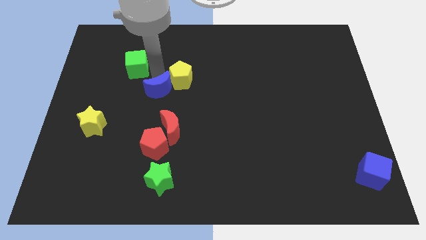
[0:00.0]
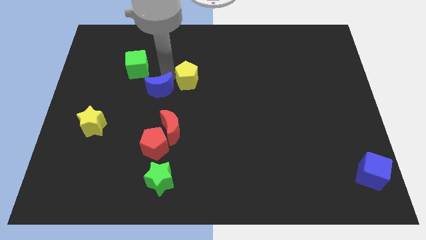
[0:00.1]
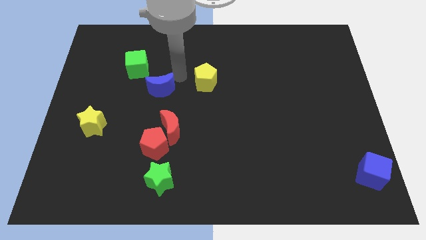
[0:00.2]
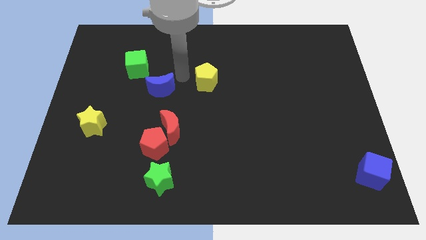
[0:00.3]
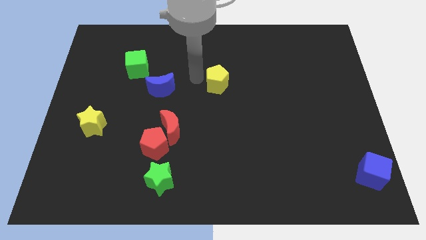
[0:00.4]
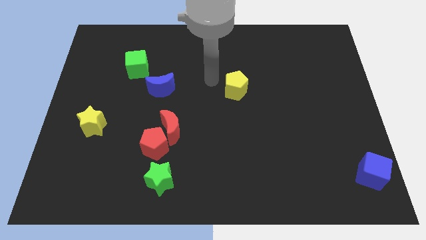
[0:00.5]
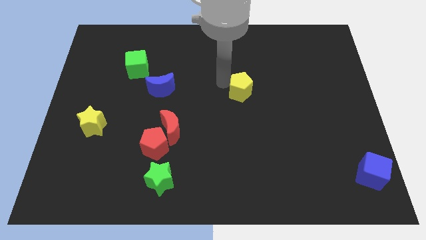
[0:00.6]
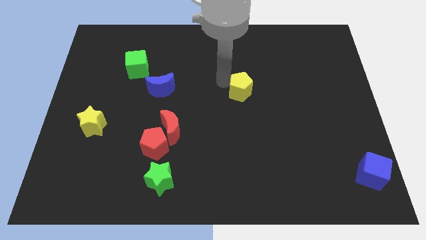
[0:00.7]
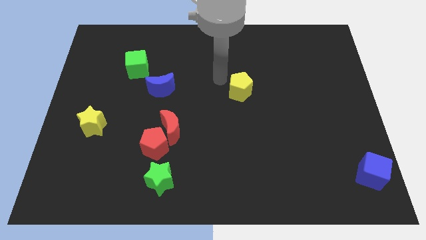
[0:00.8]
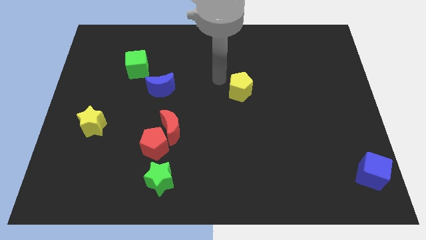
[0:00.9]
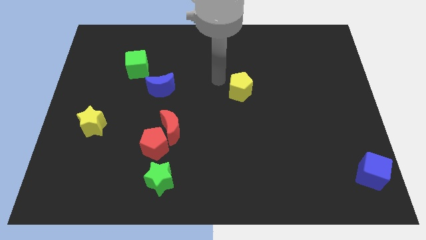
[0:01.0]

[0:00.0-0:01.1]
push yellow pentagon to the center of the board

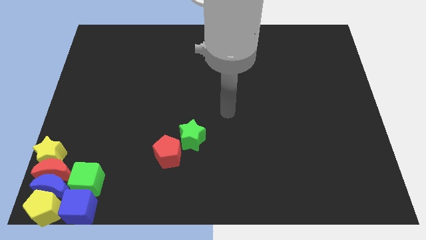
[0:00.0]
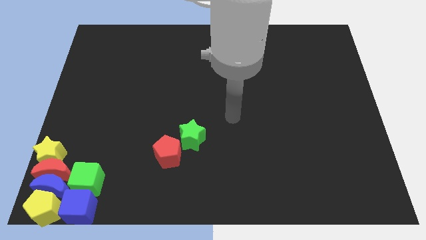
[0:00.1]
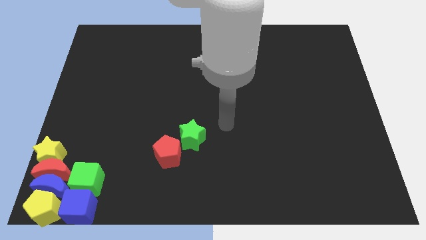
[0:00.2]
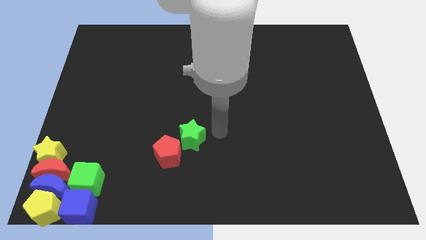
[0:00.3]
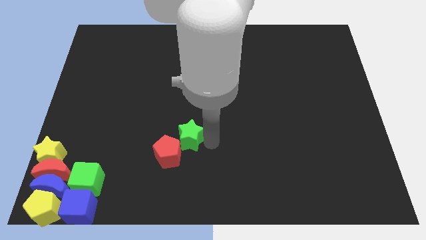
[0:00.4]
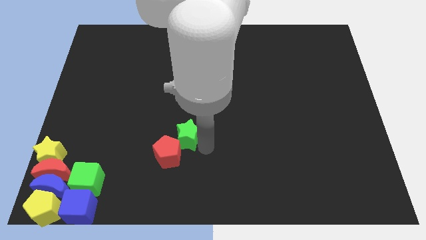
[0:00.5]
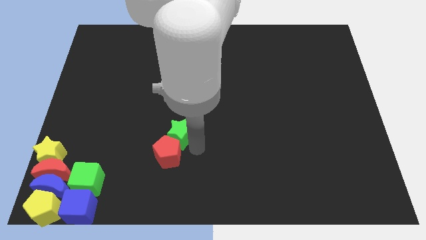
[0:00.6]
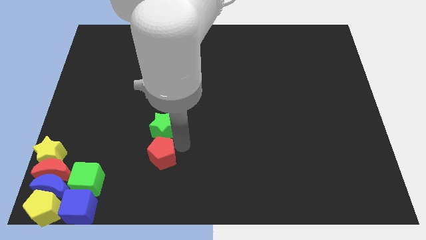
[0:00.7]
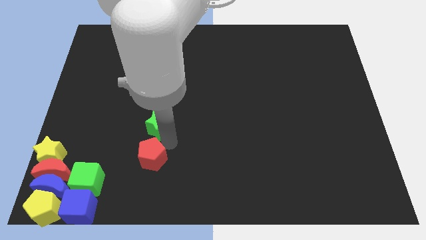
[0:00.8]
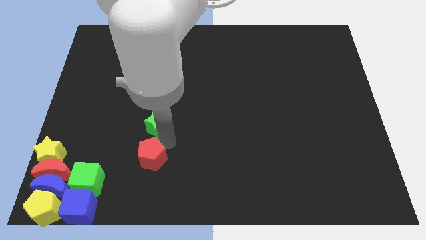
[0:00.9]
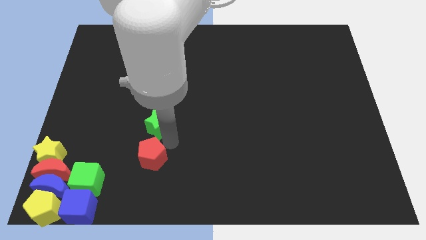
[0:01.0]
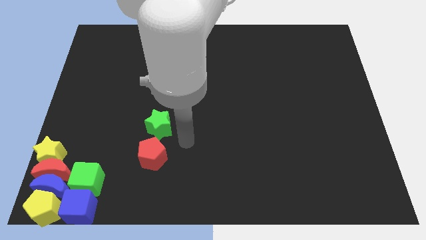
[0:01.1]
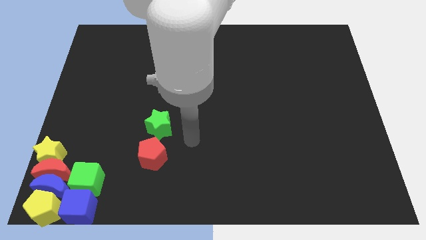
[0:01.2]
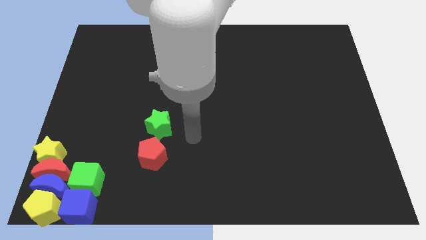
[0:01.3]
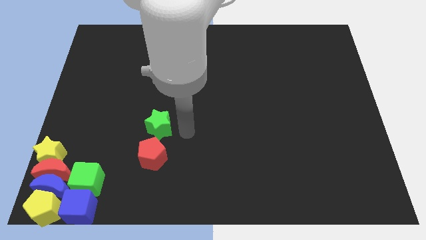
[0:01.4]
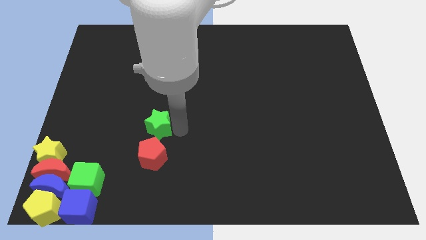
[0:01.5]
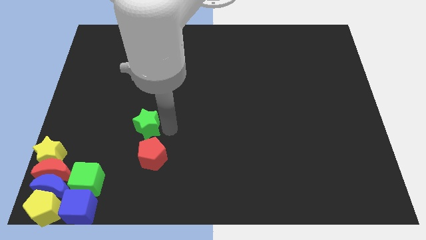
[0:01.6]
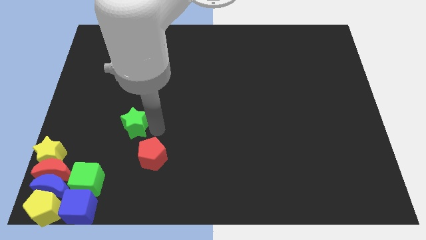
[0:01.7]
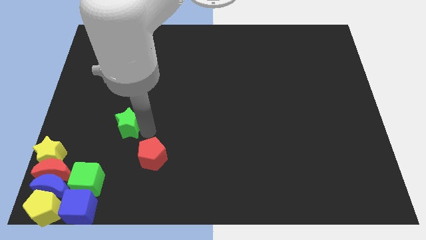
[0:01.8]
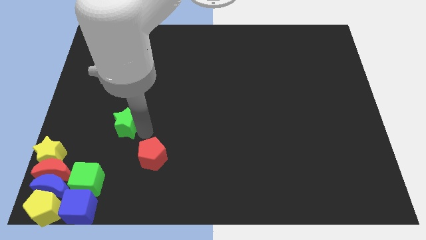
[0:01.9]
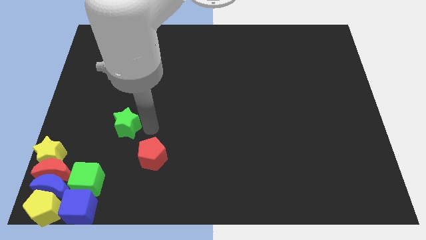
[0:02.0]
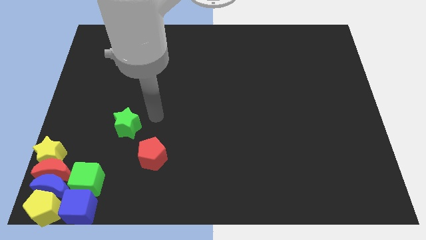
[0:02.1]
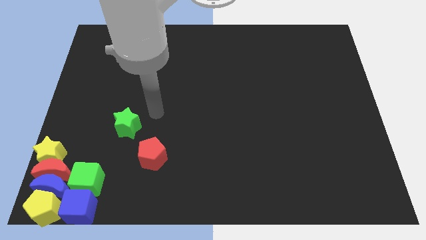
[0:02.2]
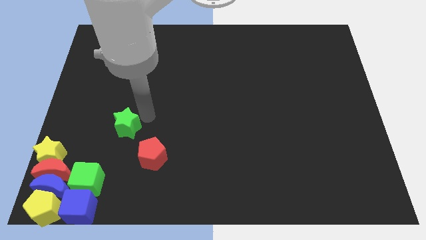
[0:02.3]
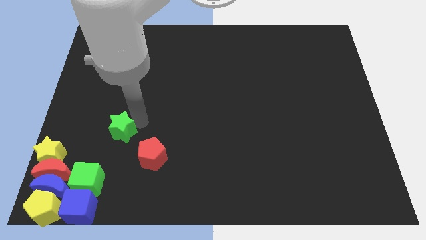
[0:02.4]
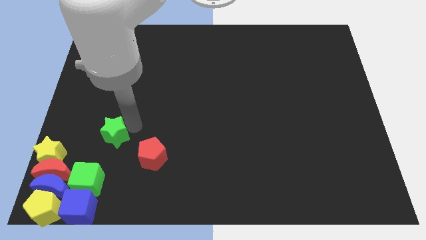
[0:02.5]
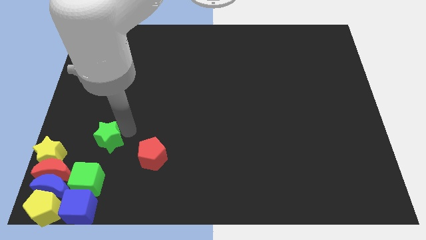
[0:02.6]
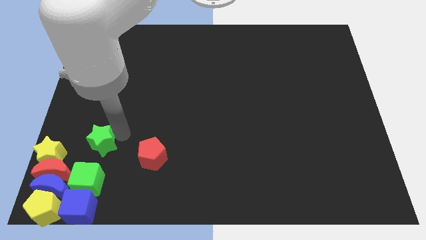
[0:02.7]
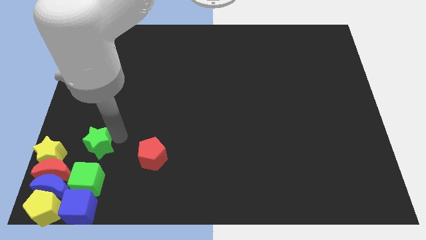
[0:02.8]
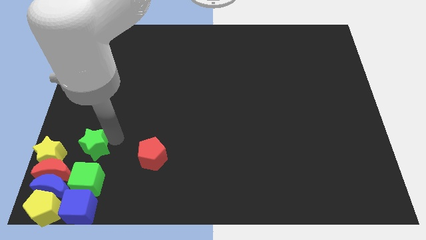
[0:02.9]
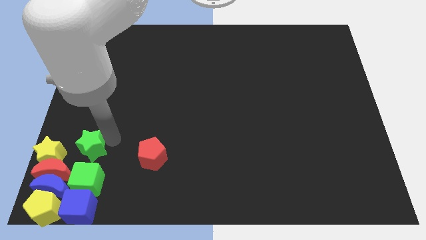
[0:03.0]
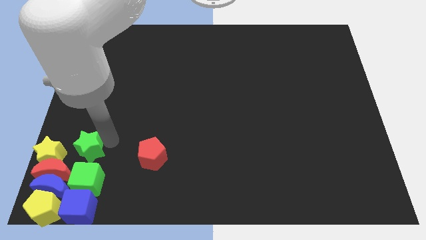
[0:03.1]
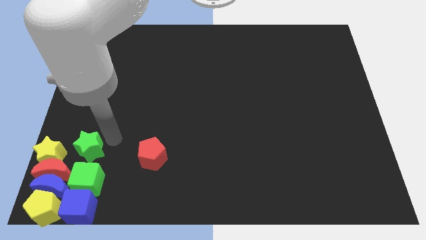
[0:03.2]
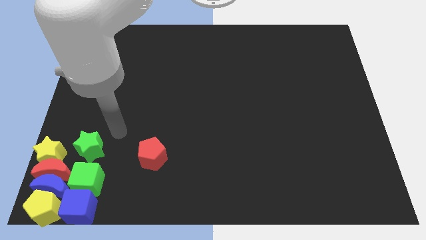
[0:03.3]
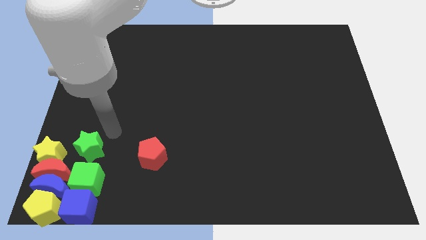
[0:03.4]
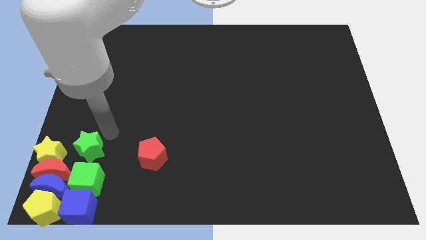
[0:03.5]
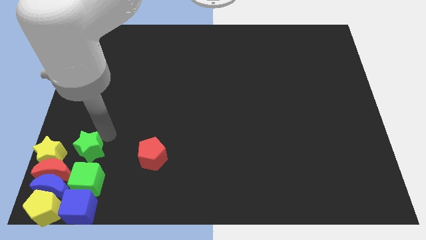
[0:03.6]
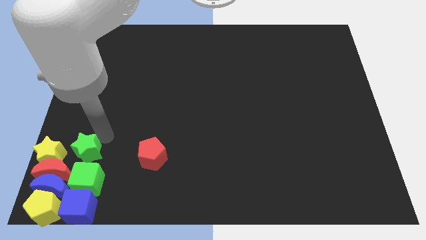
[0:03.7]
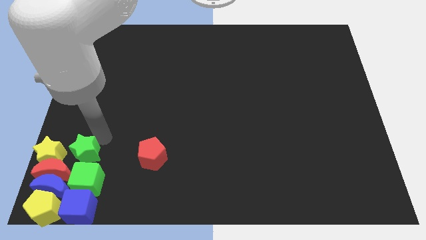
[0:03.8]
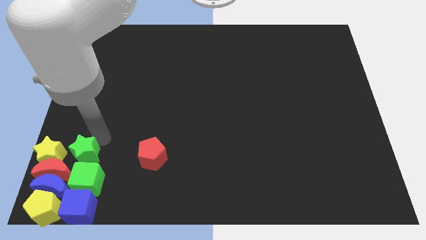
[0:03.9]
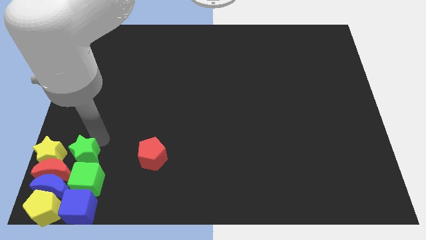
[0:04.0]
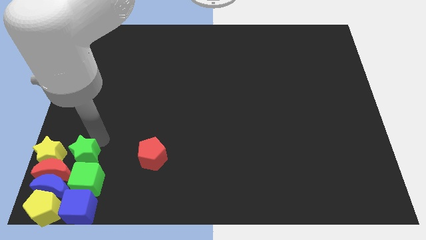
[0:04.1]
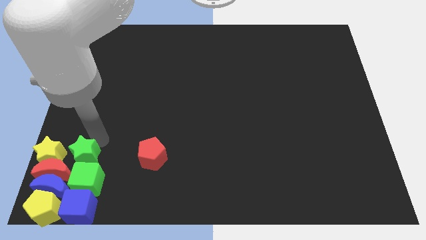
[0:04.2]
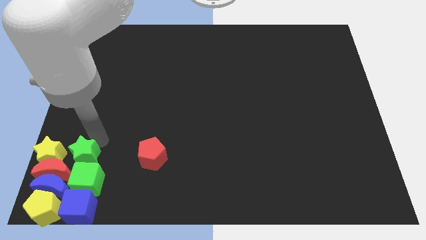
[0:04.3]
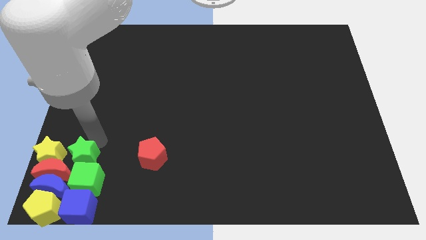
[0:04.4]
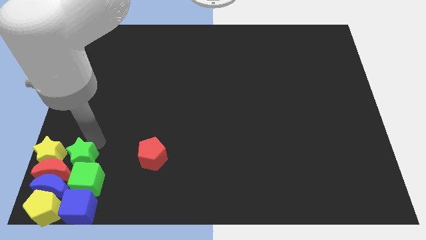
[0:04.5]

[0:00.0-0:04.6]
move green star above green cube

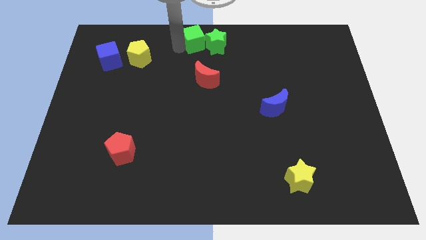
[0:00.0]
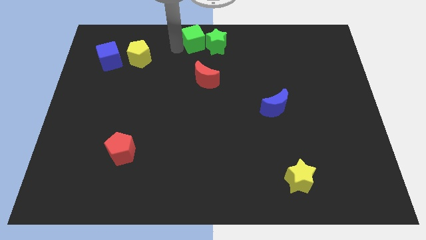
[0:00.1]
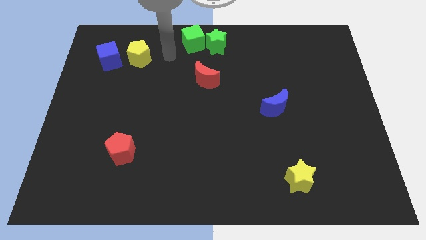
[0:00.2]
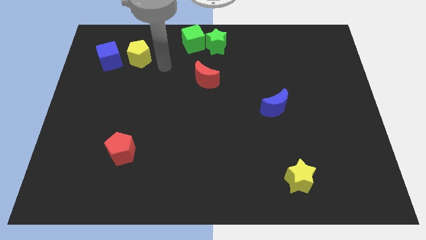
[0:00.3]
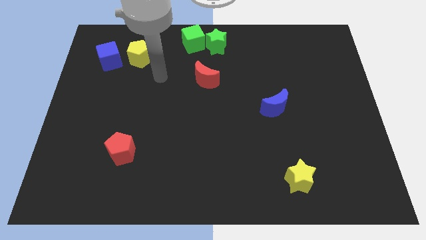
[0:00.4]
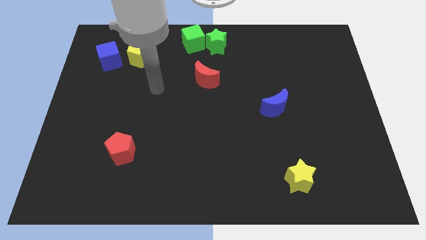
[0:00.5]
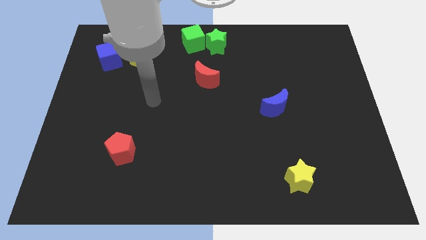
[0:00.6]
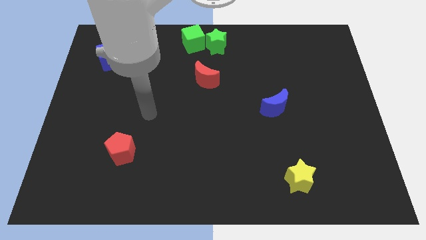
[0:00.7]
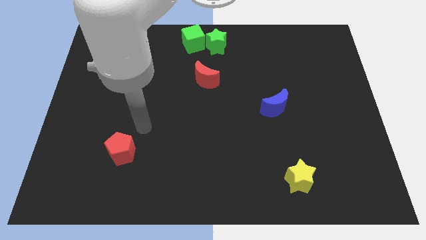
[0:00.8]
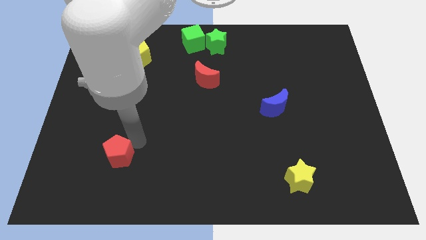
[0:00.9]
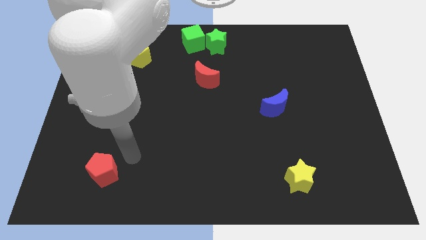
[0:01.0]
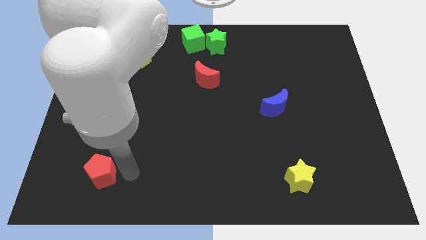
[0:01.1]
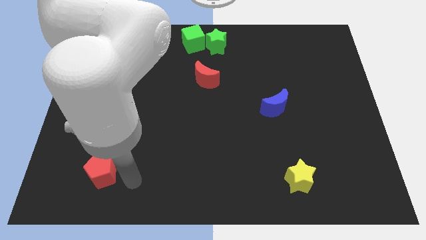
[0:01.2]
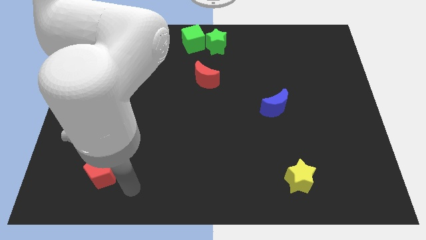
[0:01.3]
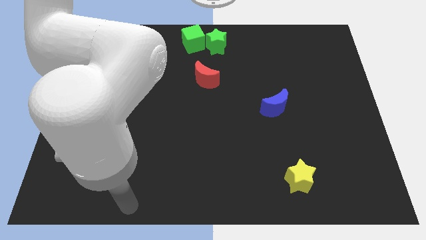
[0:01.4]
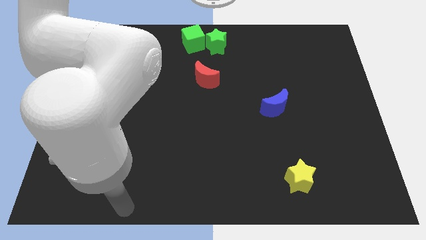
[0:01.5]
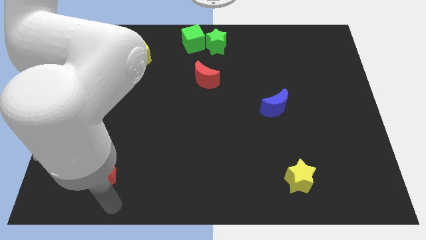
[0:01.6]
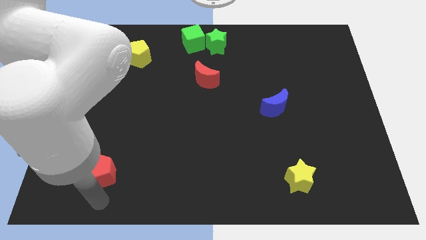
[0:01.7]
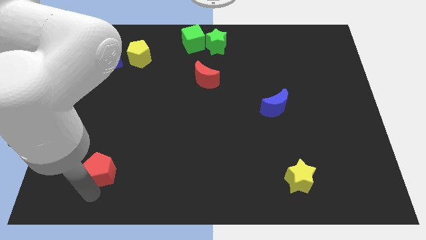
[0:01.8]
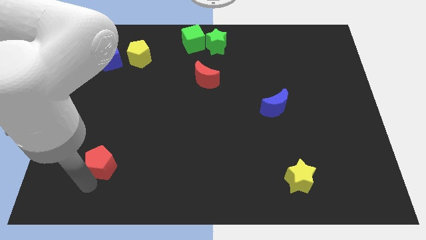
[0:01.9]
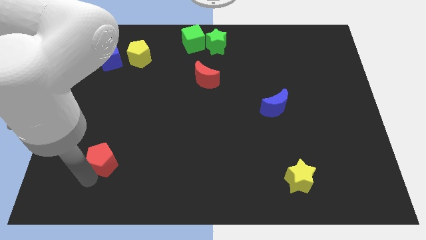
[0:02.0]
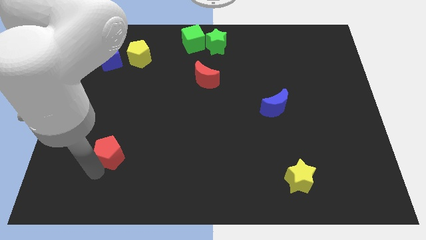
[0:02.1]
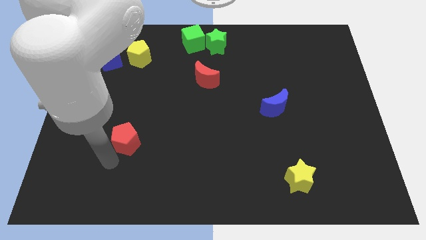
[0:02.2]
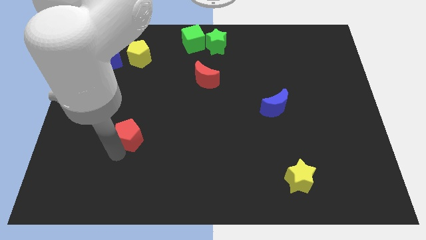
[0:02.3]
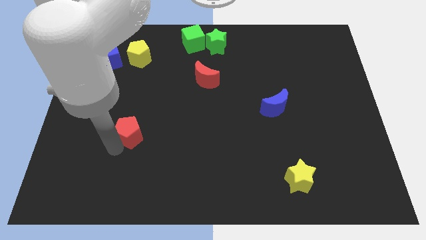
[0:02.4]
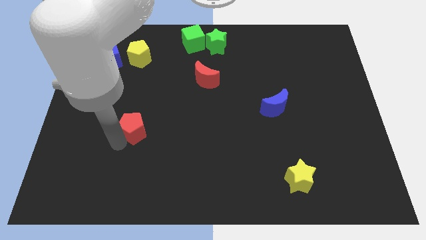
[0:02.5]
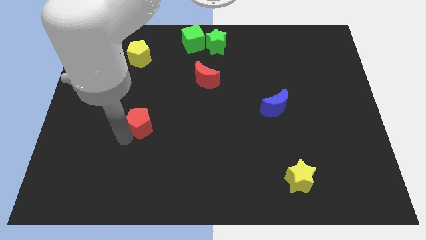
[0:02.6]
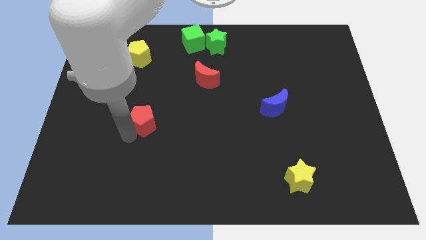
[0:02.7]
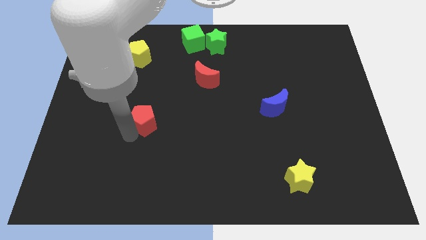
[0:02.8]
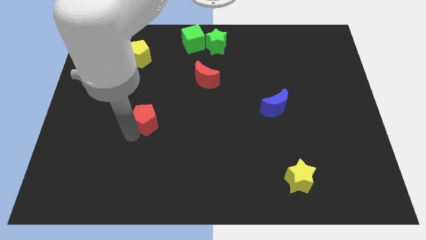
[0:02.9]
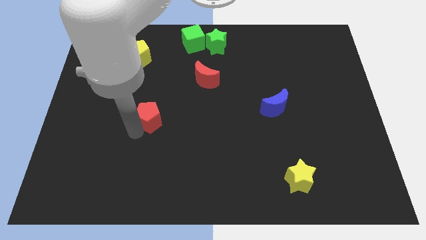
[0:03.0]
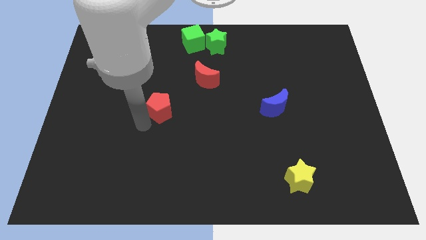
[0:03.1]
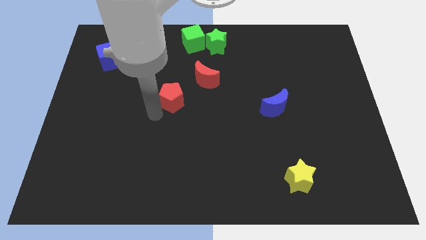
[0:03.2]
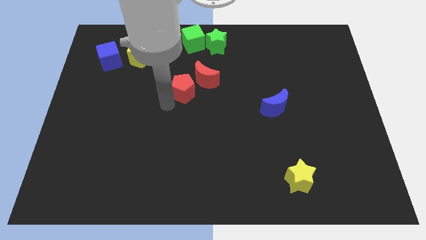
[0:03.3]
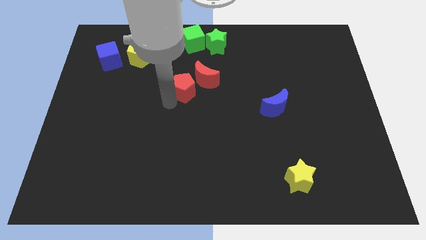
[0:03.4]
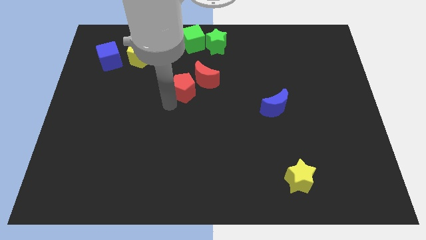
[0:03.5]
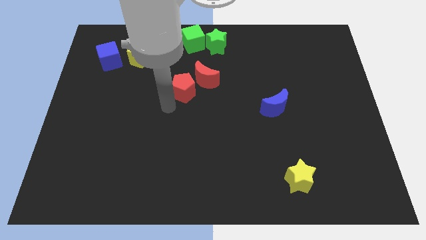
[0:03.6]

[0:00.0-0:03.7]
move the red pentagon closer to the red crescent
